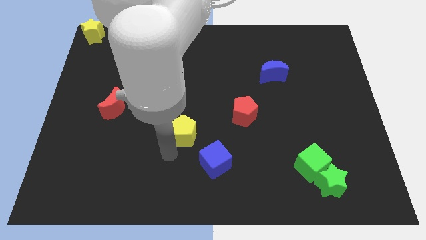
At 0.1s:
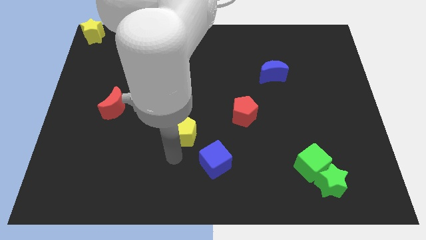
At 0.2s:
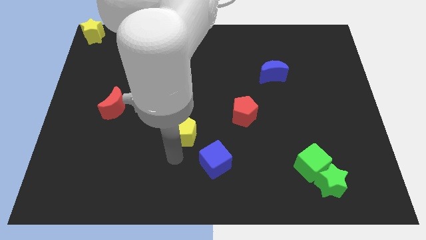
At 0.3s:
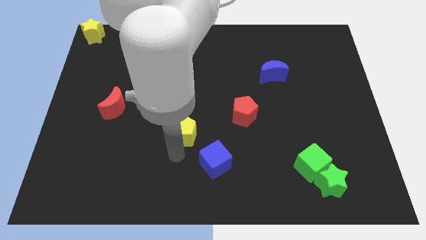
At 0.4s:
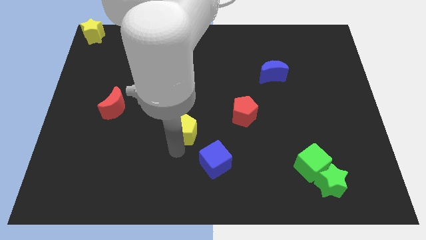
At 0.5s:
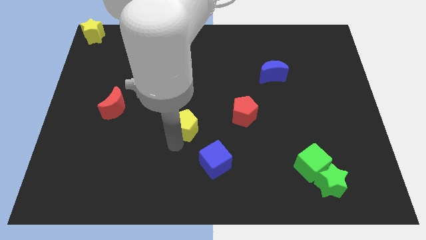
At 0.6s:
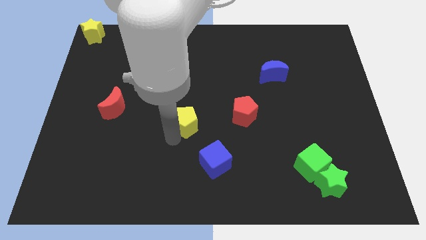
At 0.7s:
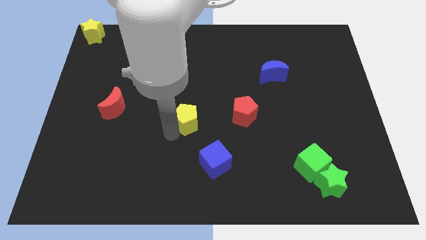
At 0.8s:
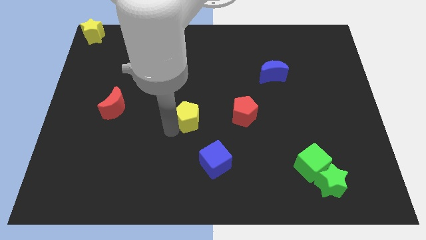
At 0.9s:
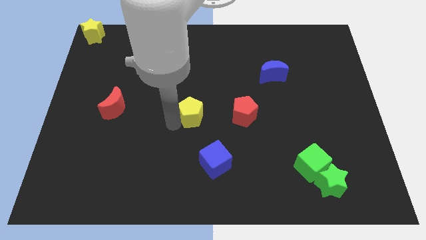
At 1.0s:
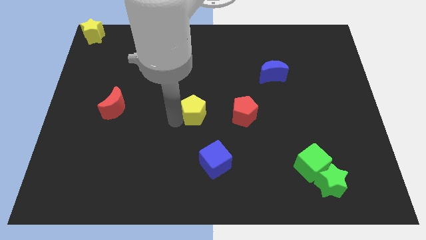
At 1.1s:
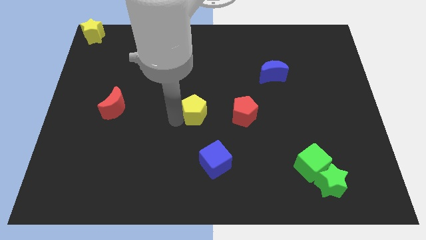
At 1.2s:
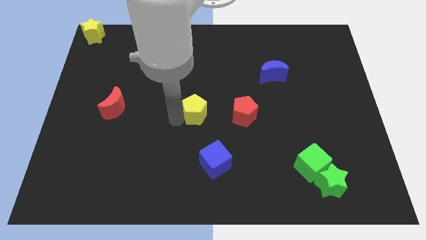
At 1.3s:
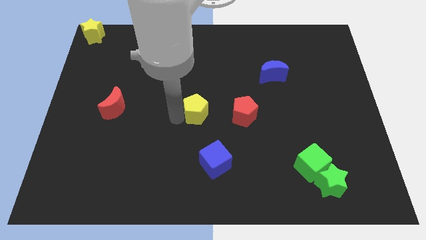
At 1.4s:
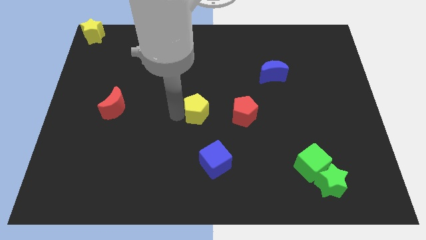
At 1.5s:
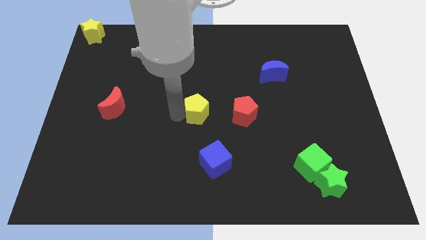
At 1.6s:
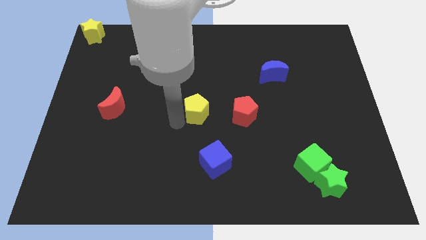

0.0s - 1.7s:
put the yellow pentagon left to the red pentagon

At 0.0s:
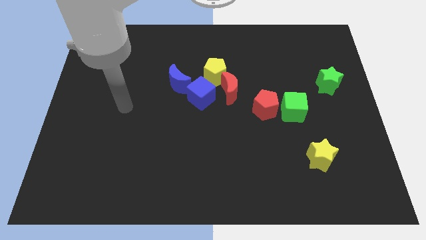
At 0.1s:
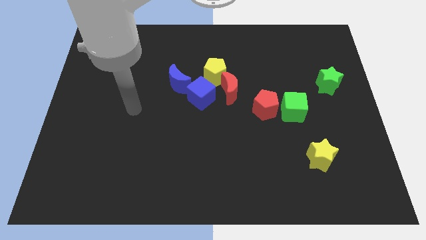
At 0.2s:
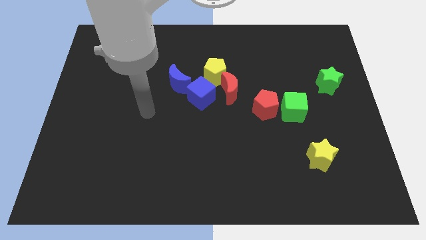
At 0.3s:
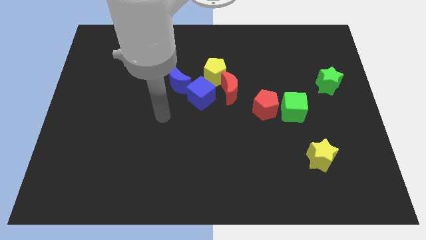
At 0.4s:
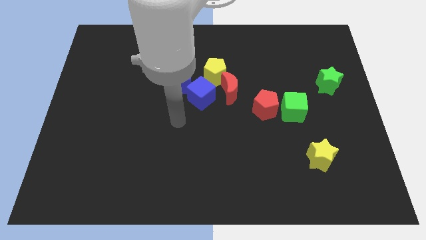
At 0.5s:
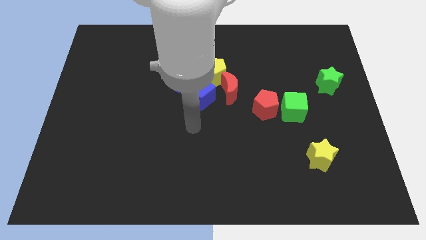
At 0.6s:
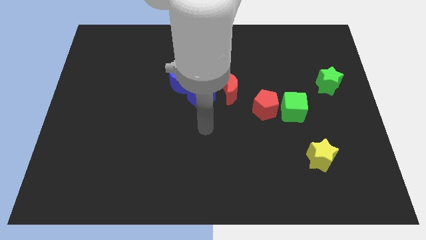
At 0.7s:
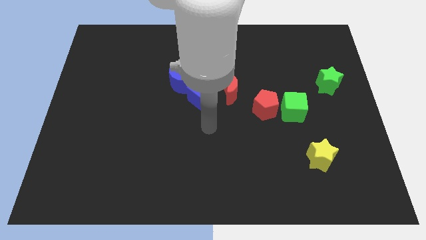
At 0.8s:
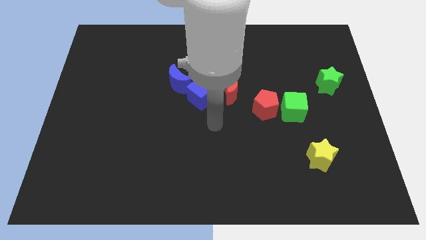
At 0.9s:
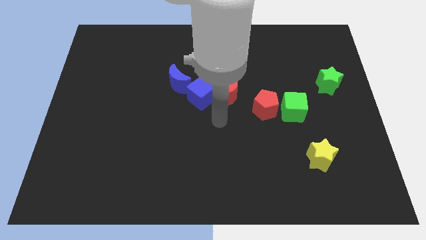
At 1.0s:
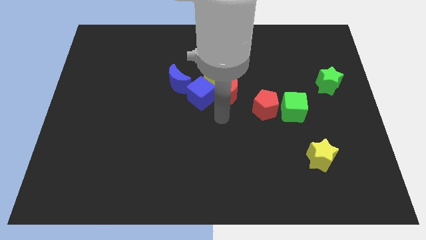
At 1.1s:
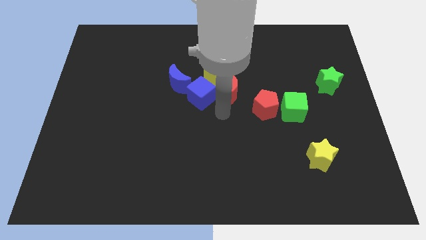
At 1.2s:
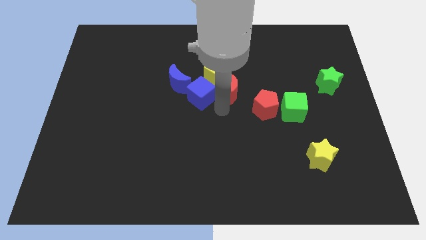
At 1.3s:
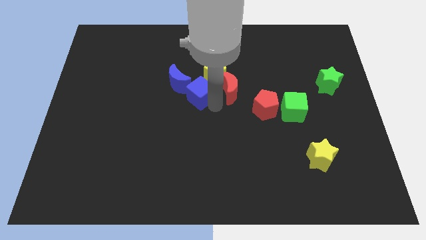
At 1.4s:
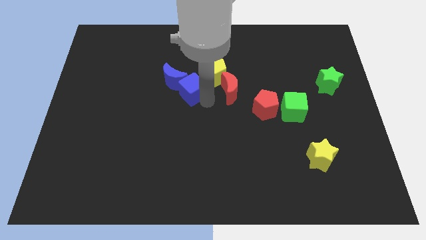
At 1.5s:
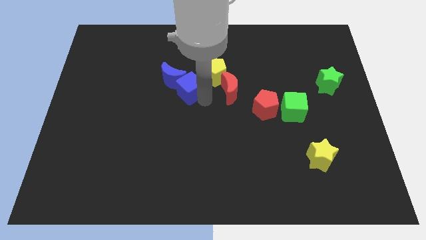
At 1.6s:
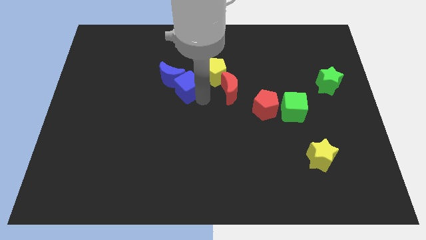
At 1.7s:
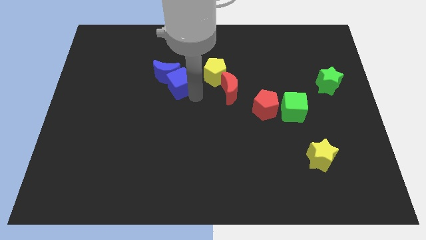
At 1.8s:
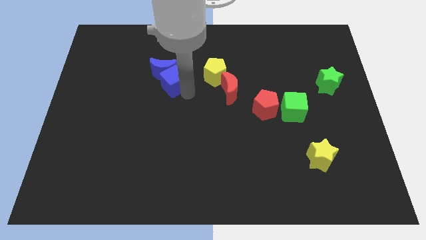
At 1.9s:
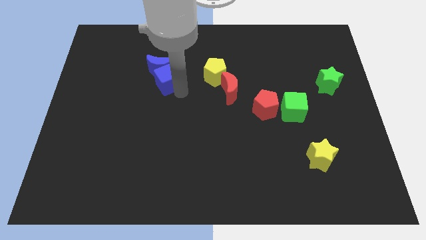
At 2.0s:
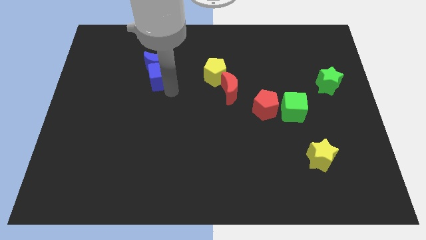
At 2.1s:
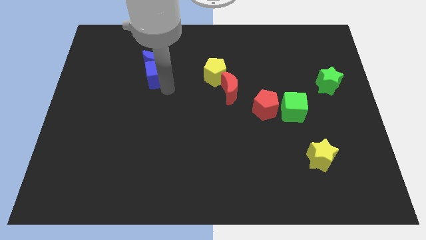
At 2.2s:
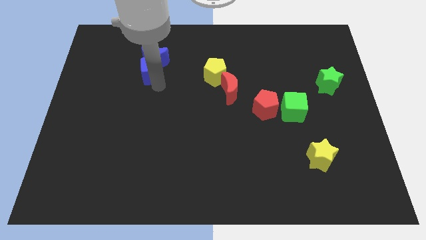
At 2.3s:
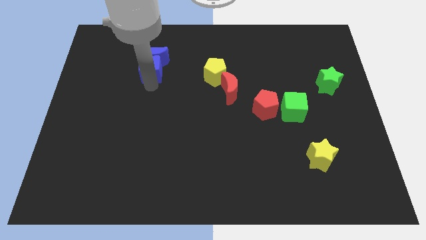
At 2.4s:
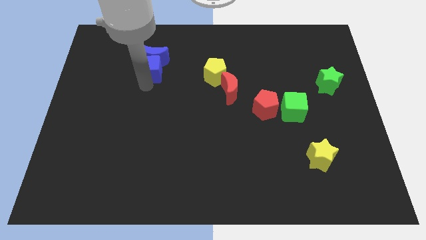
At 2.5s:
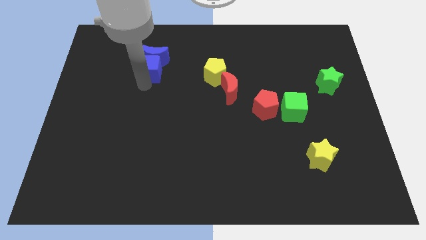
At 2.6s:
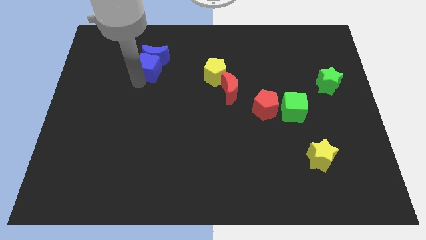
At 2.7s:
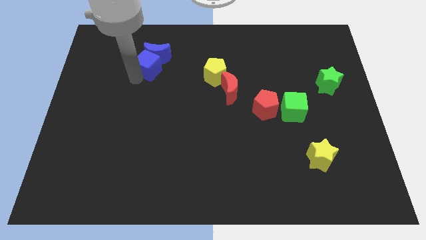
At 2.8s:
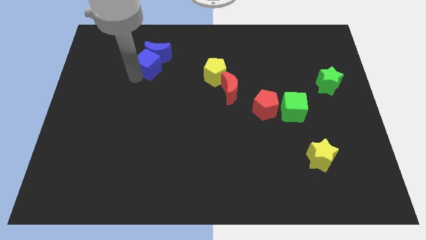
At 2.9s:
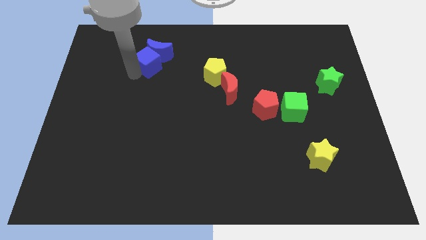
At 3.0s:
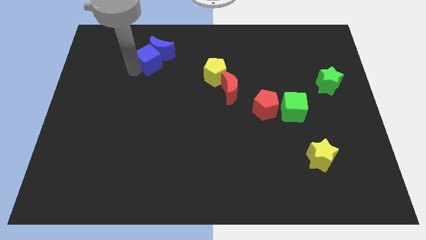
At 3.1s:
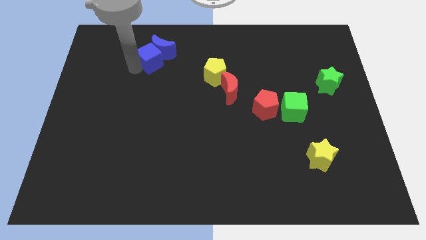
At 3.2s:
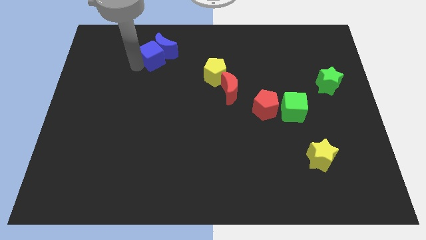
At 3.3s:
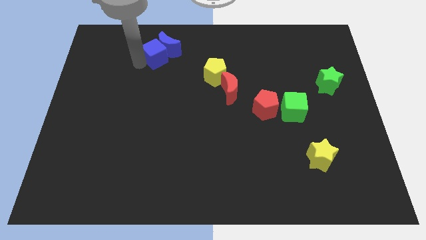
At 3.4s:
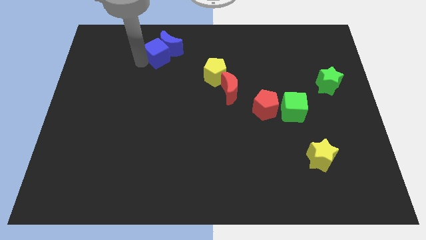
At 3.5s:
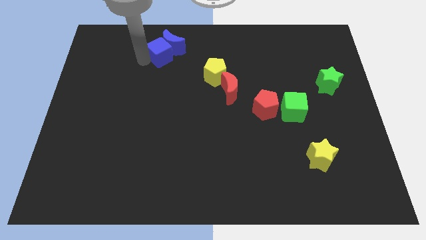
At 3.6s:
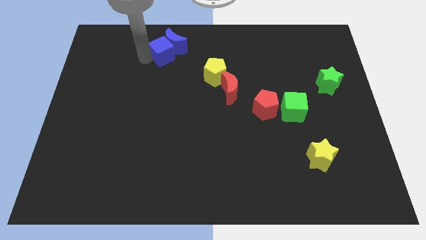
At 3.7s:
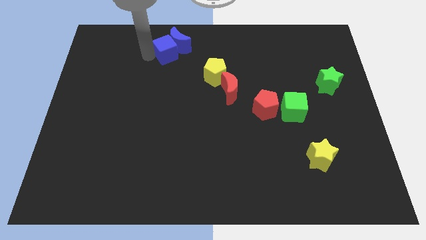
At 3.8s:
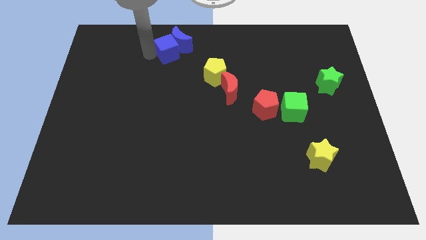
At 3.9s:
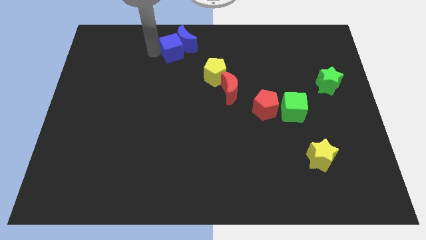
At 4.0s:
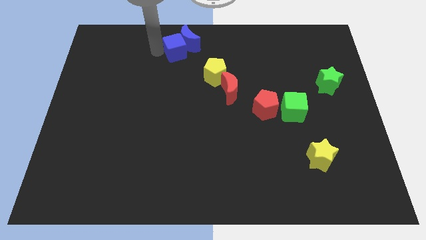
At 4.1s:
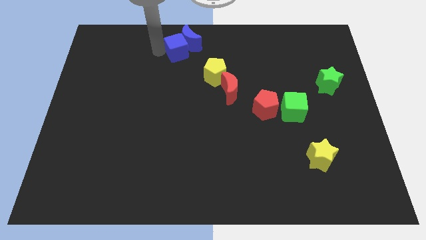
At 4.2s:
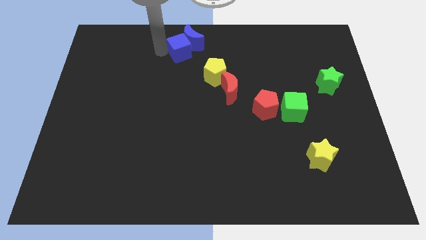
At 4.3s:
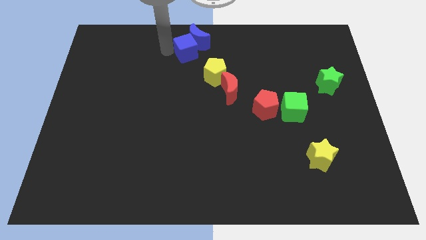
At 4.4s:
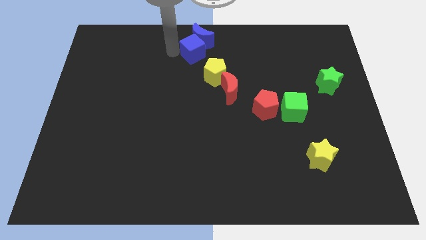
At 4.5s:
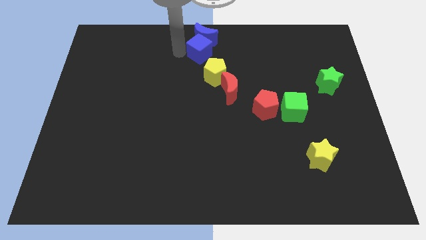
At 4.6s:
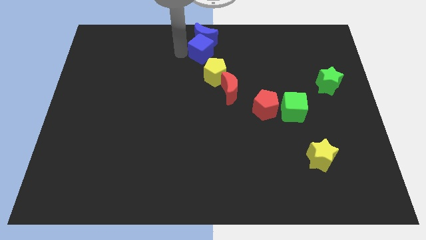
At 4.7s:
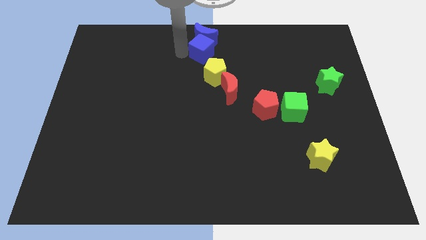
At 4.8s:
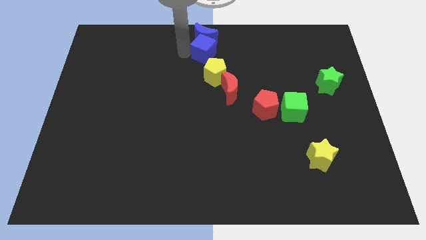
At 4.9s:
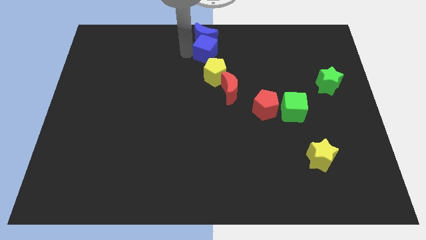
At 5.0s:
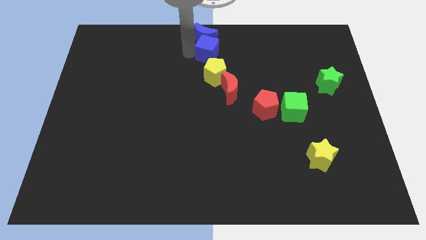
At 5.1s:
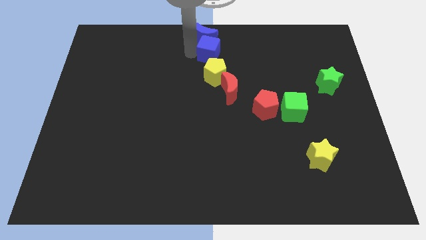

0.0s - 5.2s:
place the blue blocks at the top center

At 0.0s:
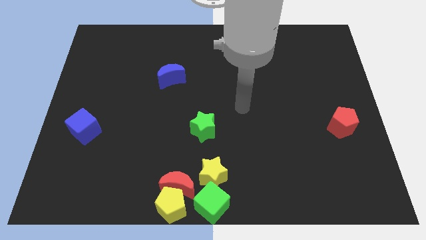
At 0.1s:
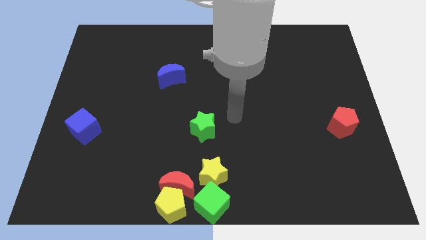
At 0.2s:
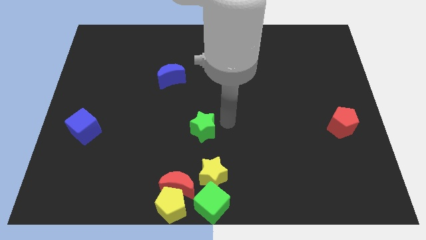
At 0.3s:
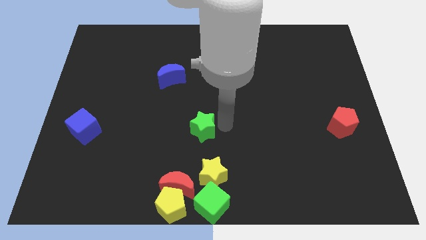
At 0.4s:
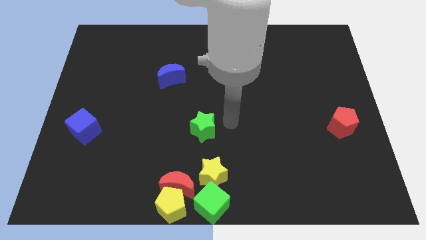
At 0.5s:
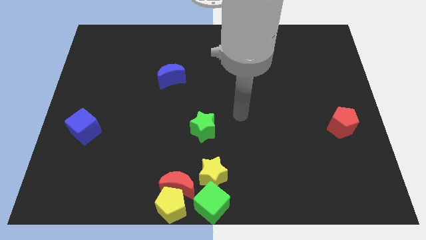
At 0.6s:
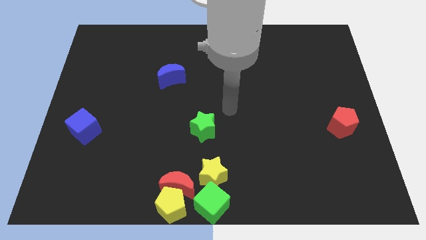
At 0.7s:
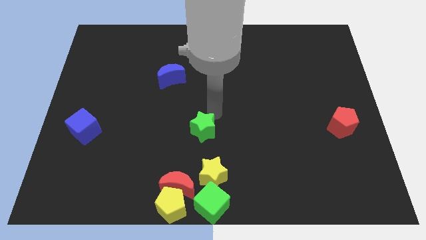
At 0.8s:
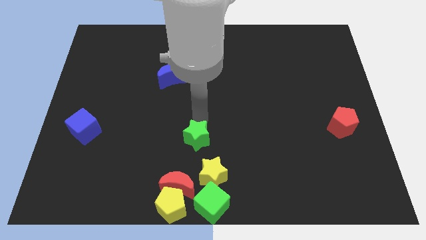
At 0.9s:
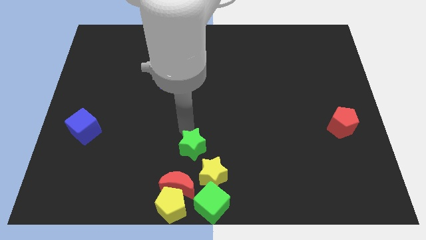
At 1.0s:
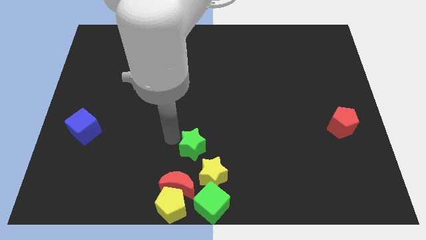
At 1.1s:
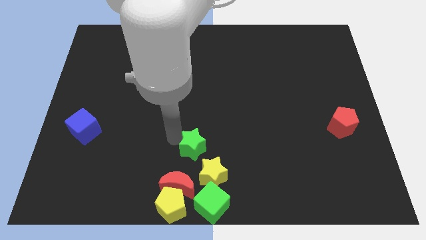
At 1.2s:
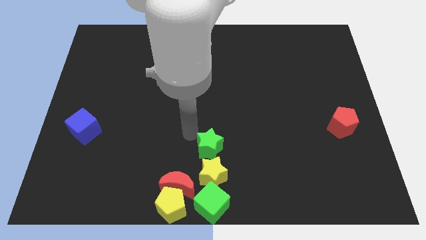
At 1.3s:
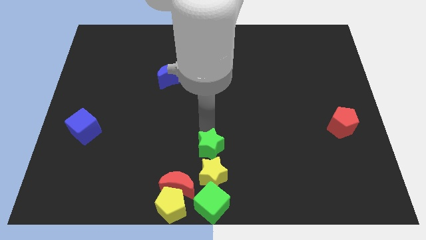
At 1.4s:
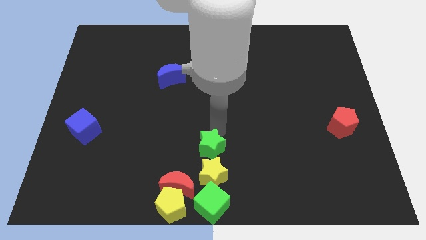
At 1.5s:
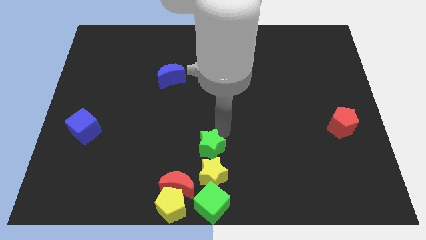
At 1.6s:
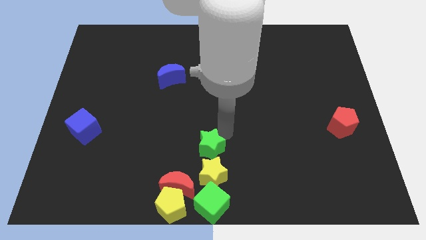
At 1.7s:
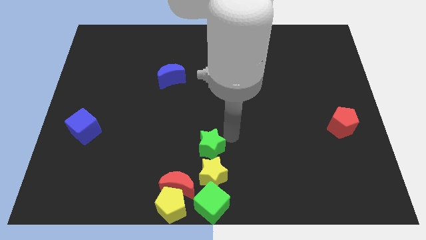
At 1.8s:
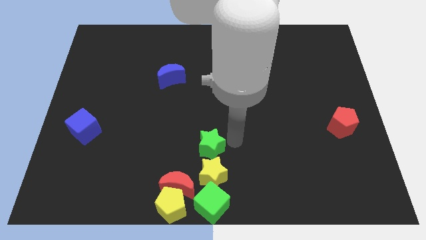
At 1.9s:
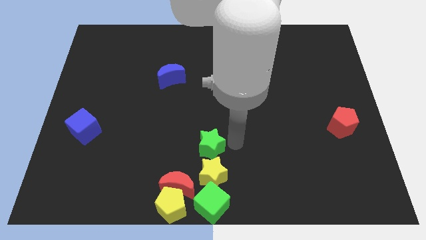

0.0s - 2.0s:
put the green star to the top side of the yellow star

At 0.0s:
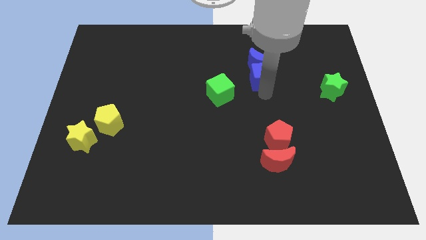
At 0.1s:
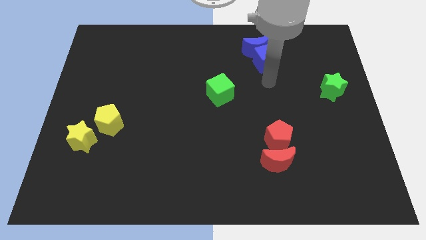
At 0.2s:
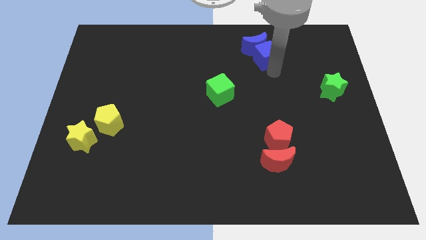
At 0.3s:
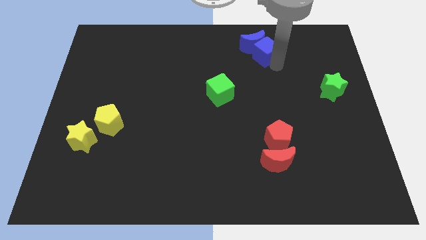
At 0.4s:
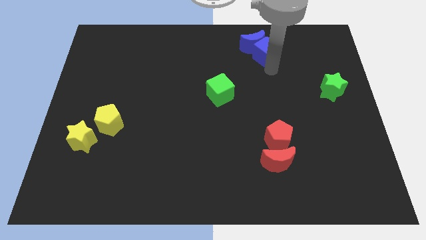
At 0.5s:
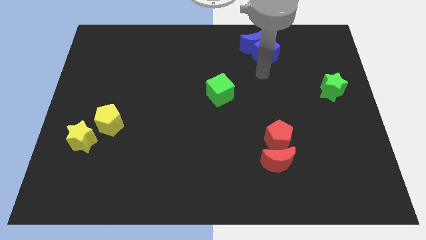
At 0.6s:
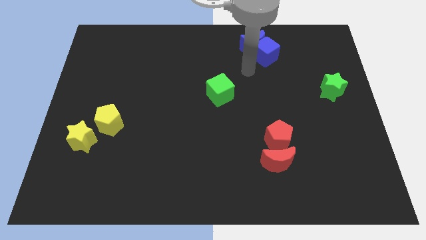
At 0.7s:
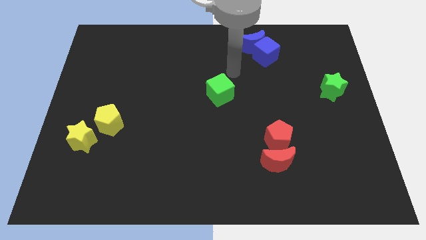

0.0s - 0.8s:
push the blue blocks towards the top center
